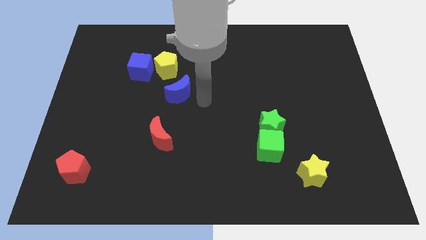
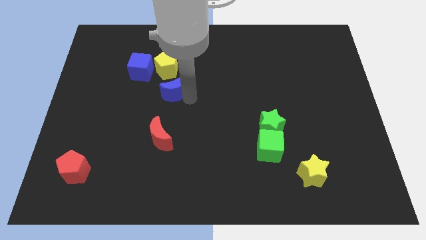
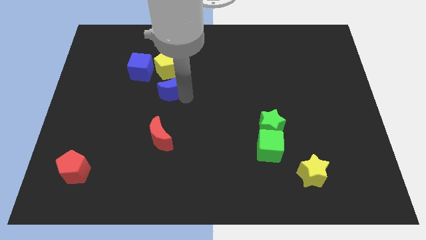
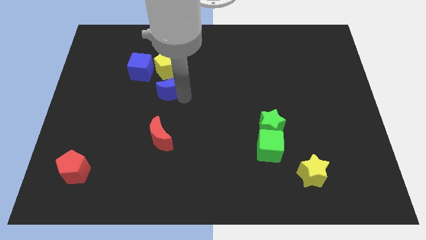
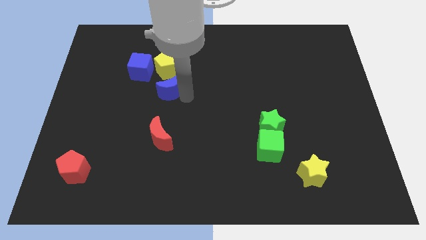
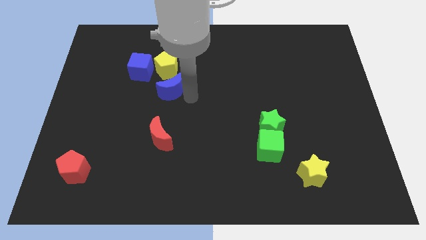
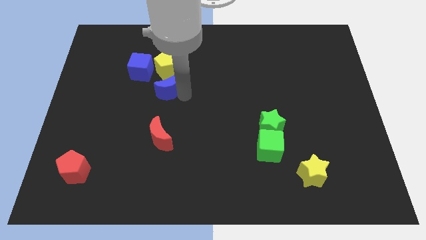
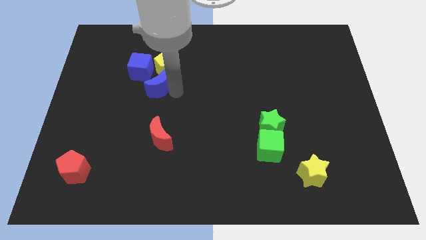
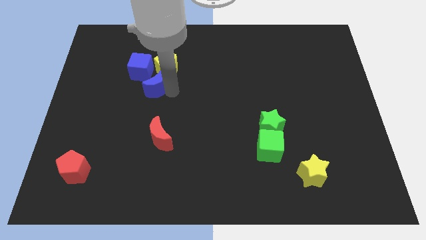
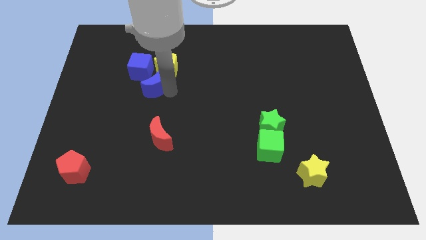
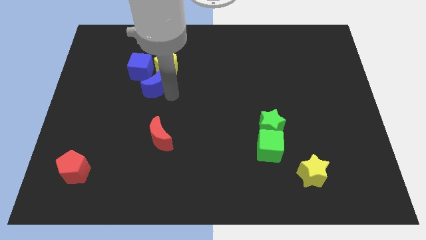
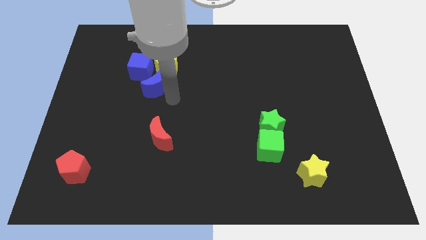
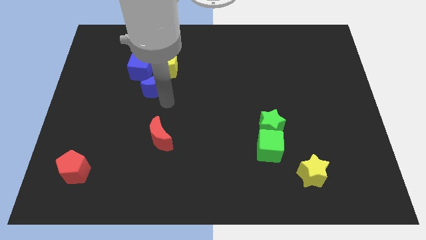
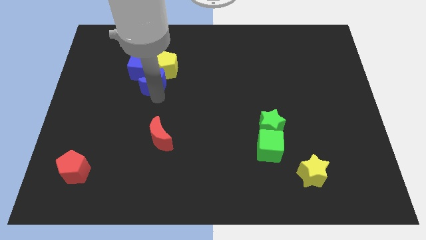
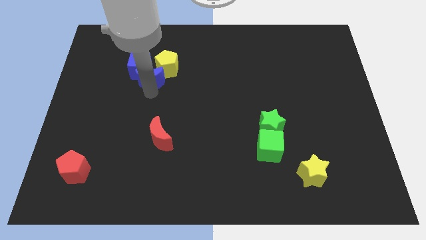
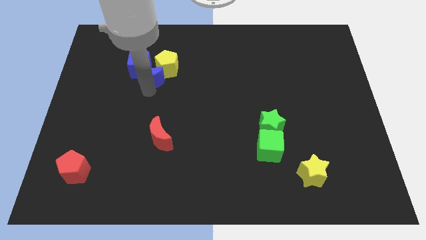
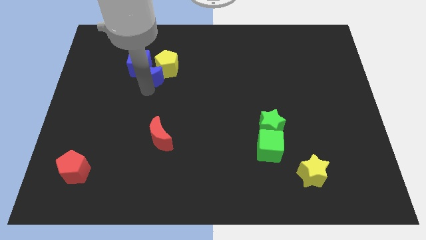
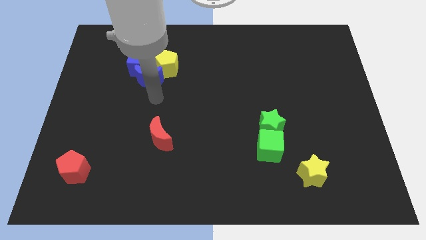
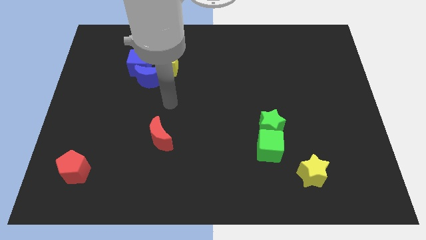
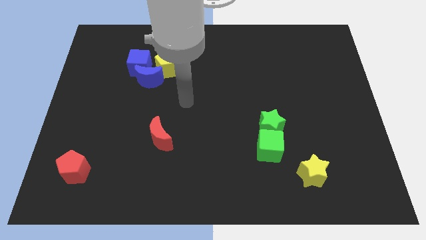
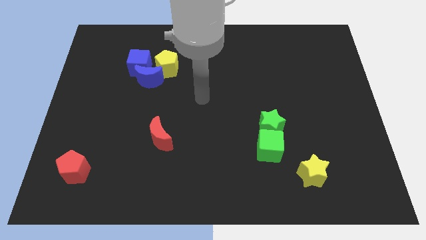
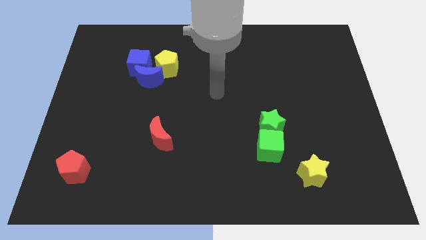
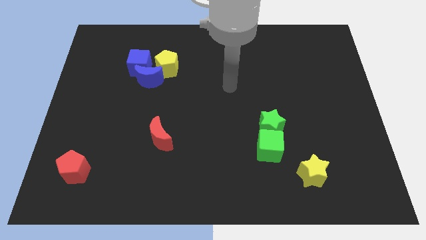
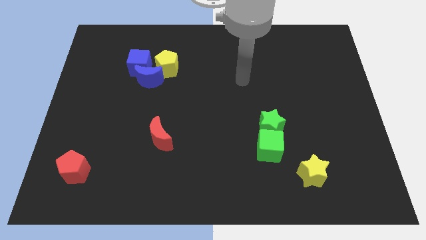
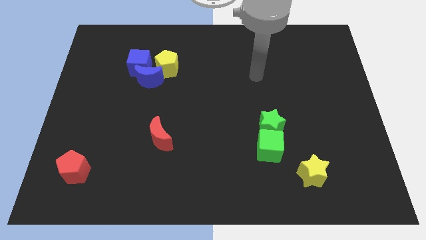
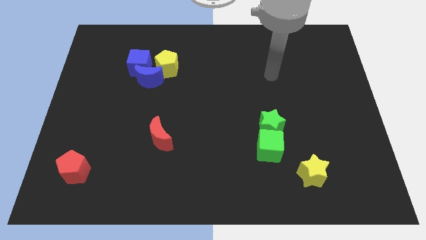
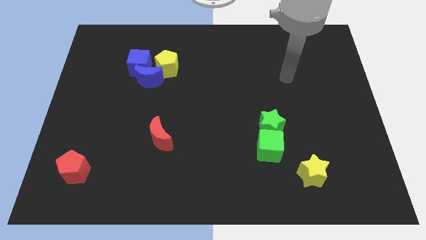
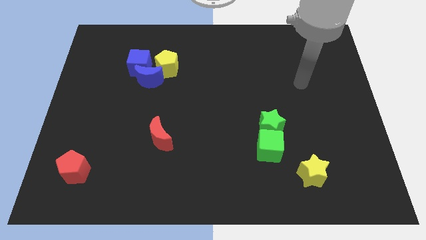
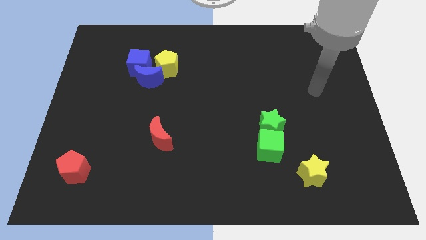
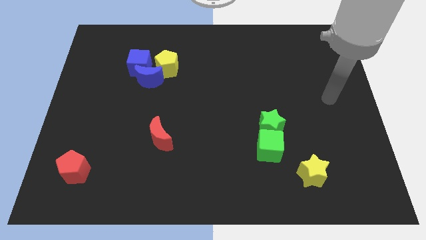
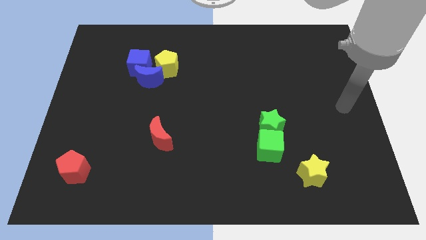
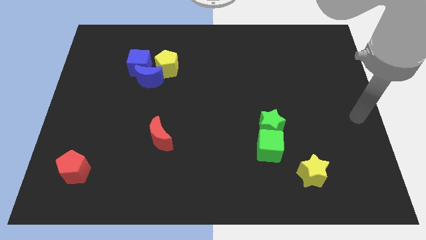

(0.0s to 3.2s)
push the blue moon into the blue cube

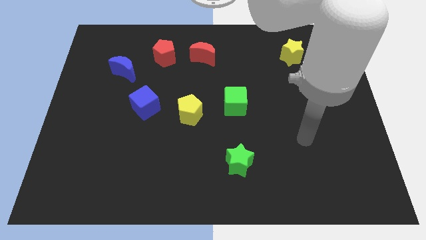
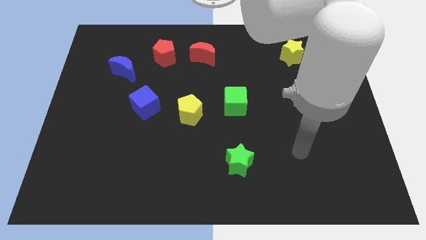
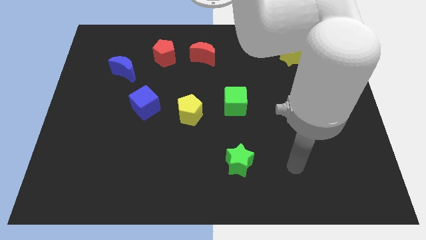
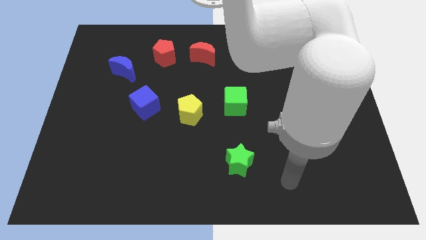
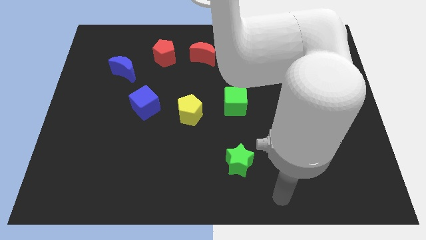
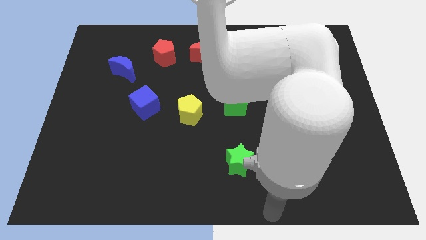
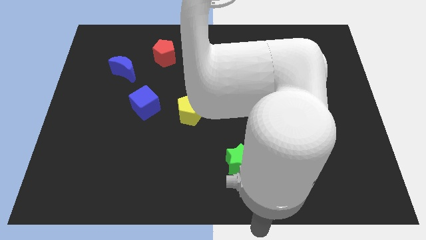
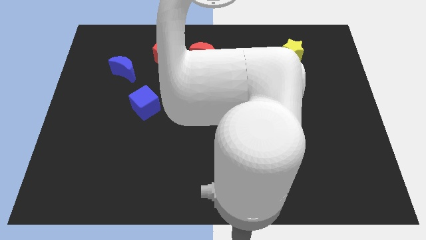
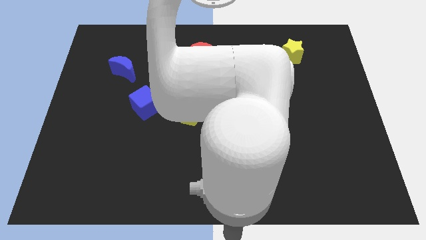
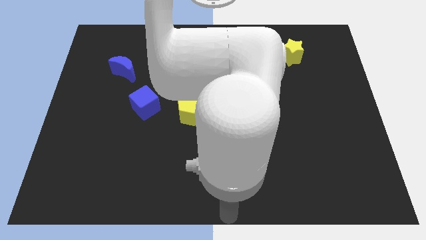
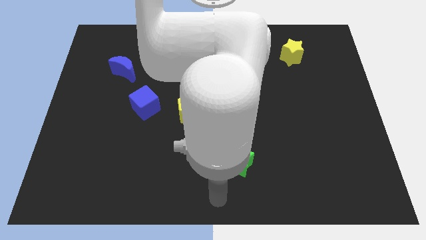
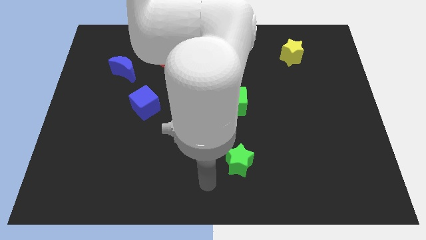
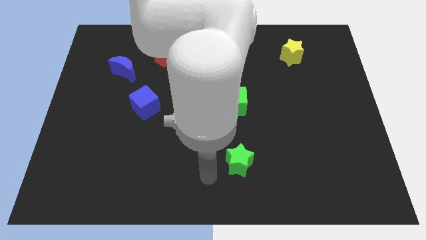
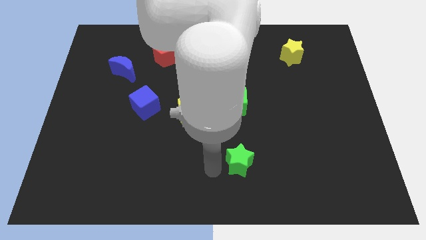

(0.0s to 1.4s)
place your hand at left side of the green star

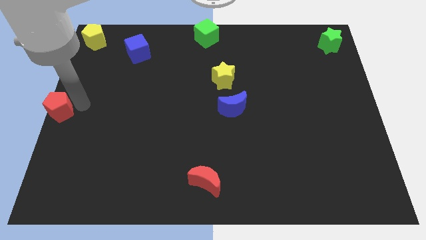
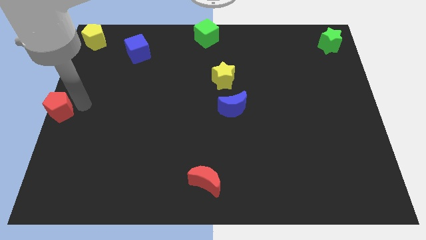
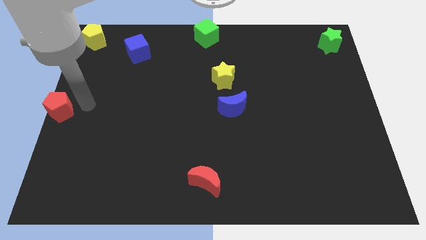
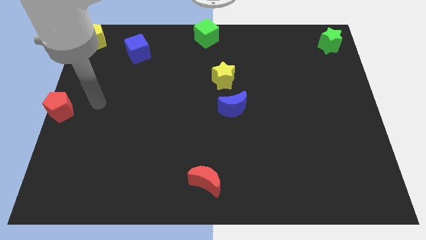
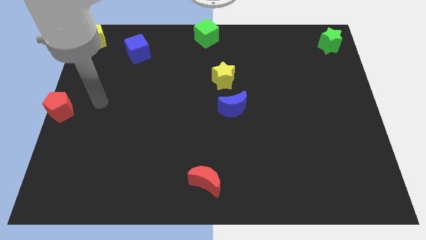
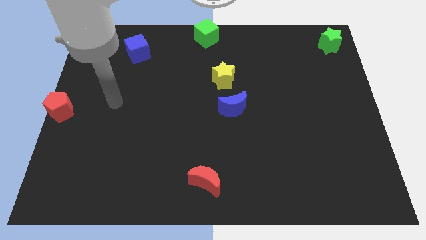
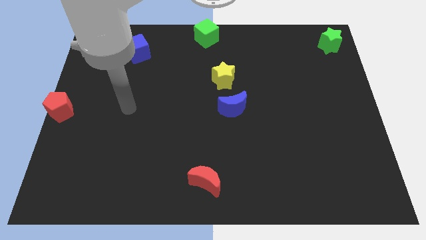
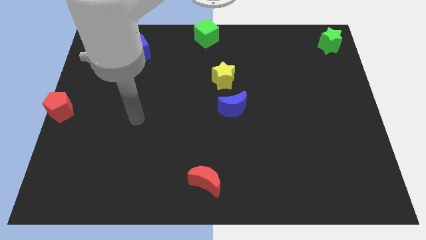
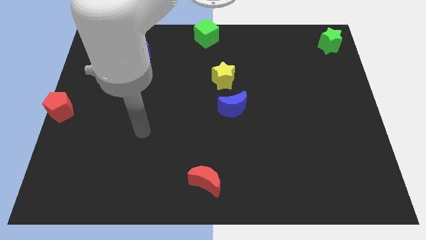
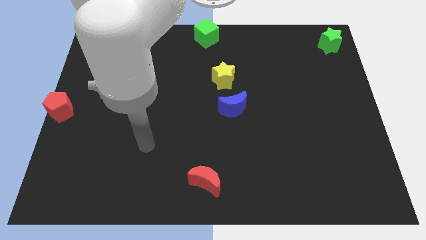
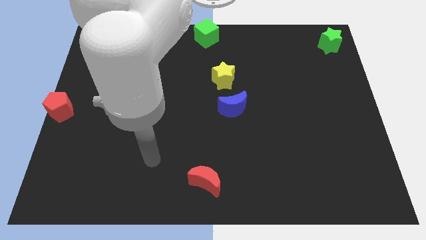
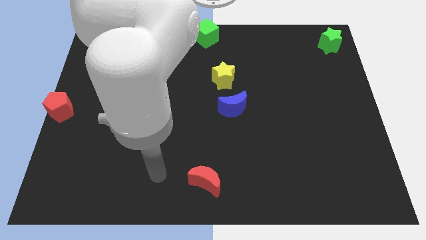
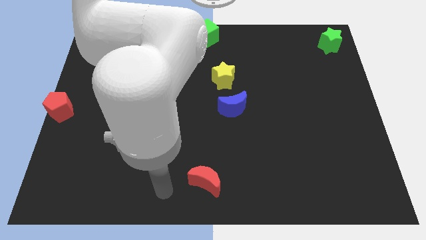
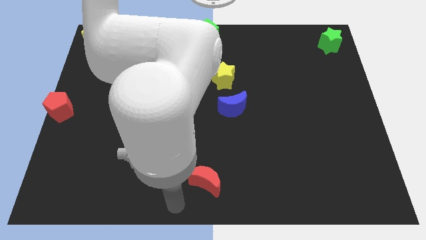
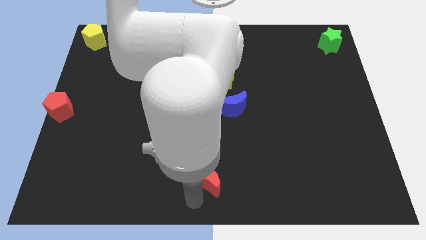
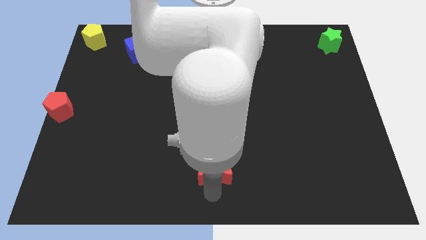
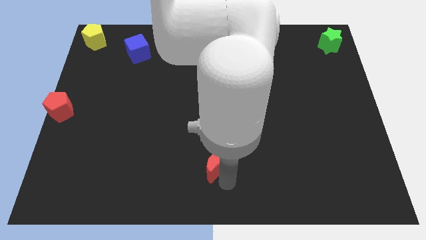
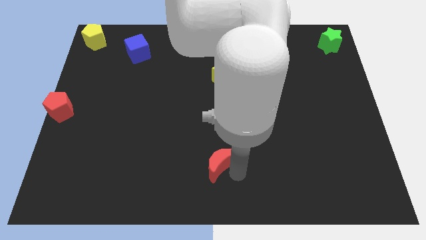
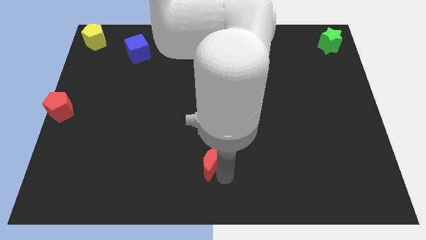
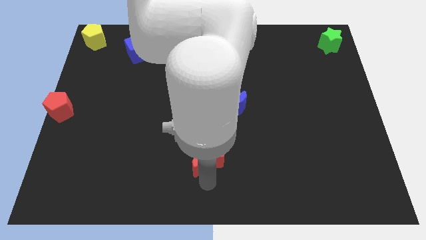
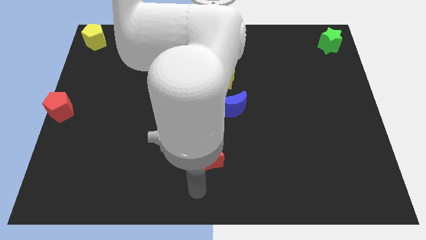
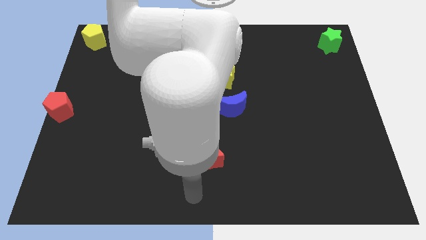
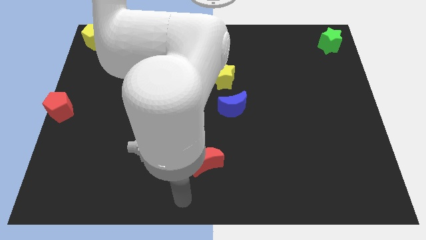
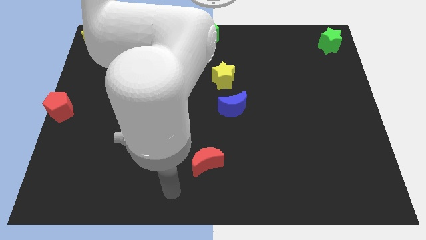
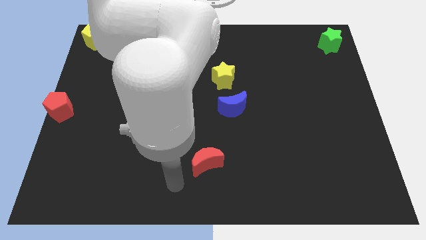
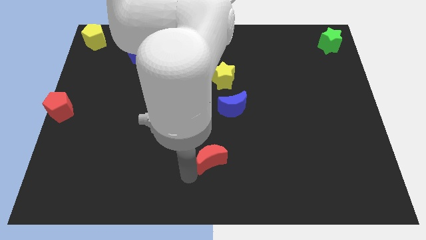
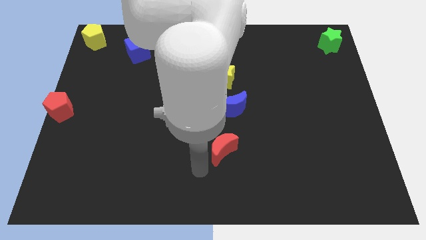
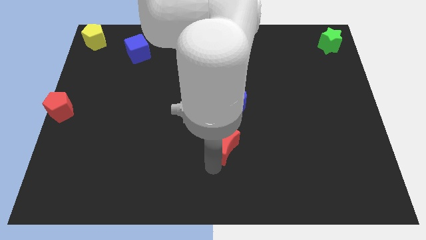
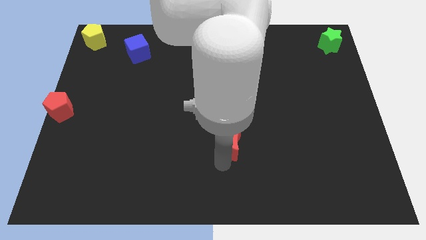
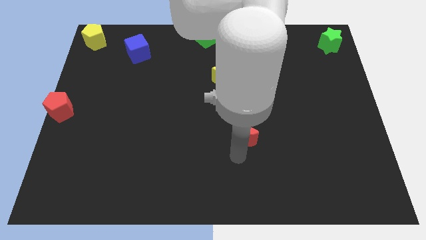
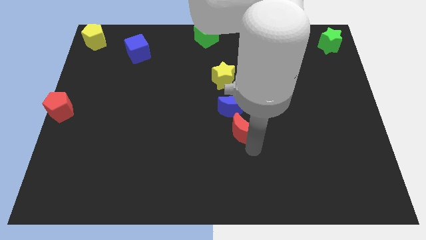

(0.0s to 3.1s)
place the red moon below the blue moon

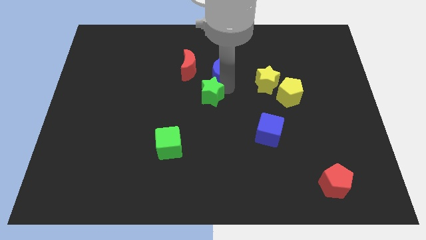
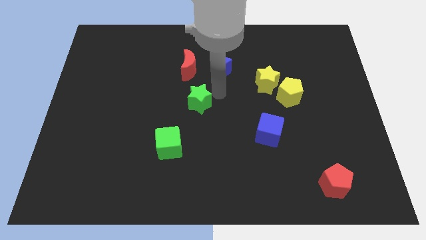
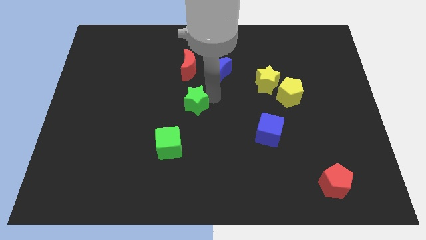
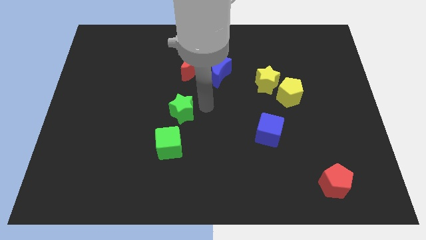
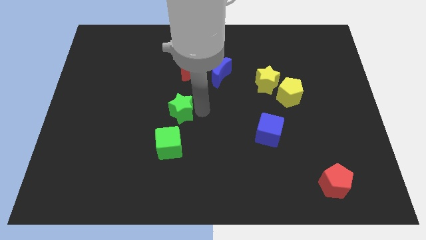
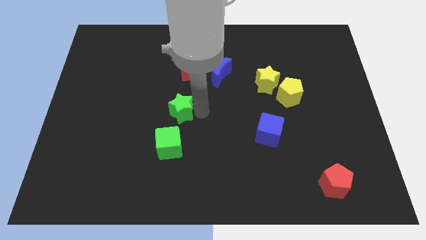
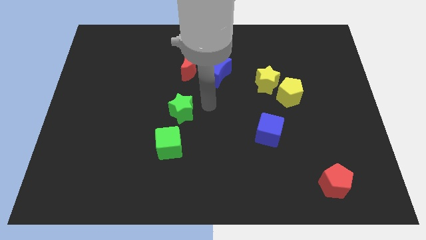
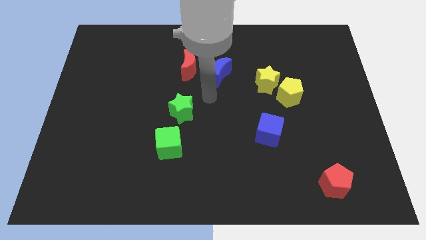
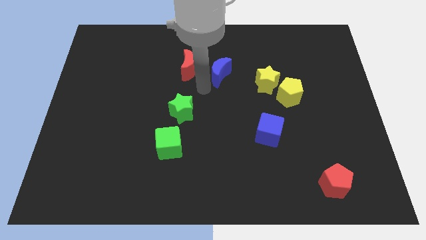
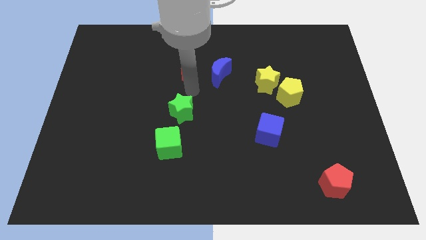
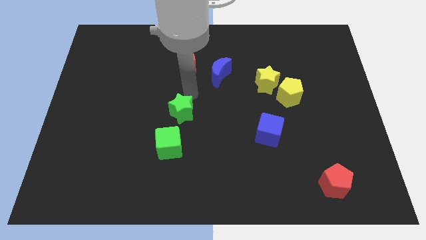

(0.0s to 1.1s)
separate the green star and the blue crescent
